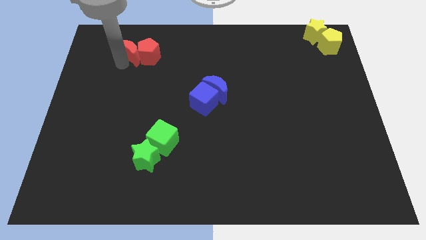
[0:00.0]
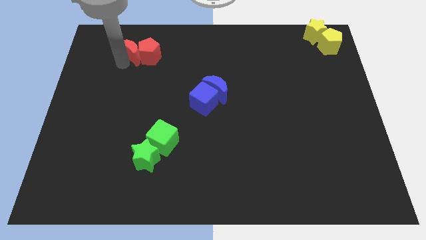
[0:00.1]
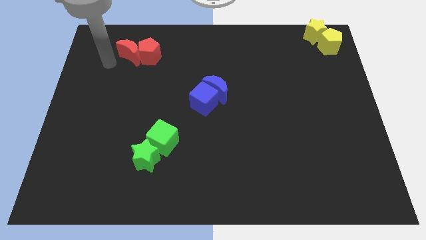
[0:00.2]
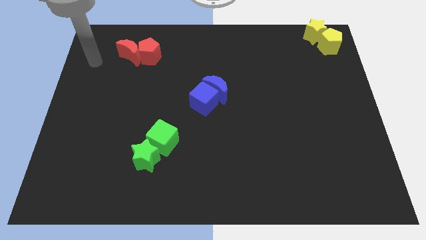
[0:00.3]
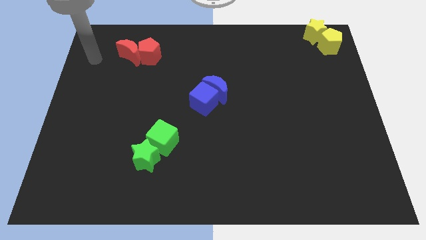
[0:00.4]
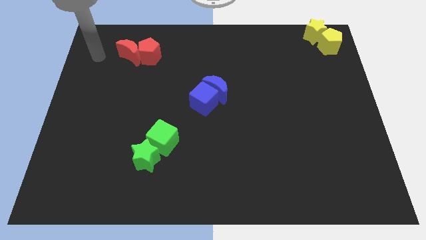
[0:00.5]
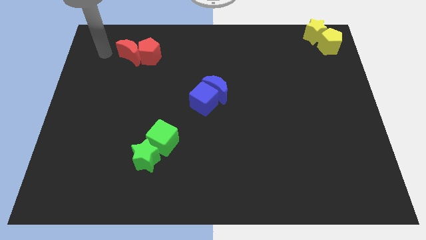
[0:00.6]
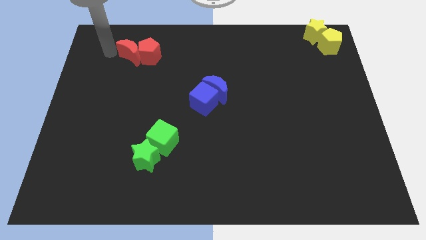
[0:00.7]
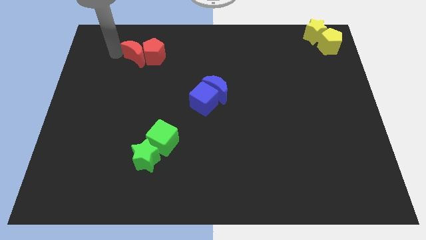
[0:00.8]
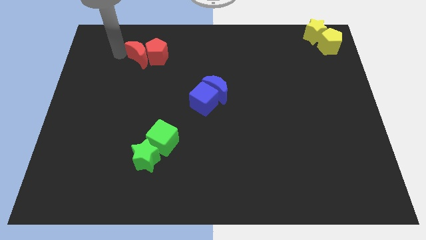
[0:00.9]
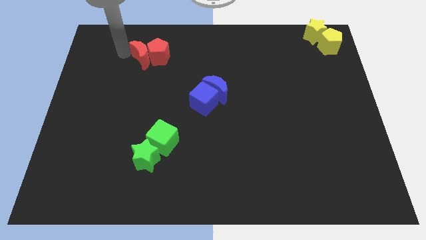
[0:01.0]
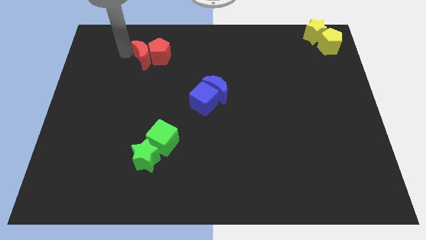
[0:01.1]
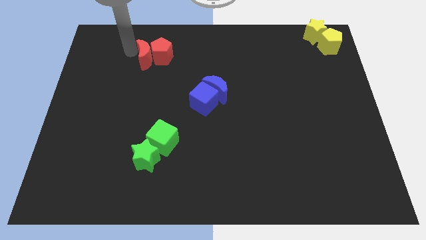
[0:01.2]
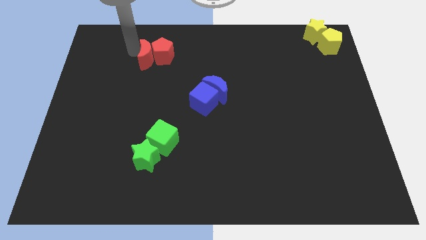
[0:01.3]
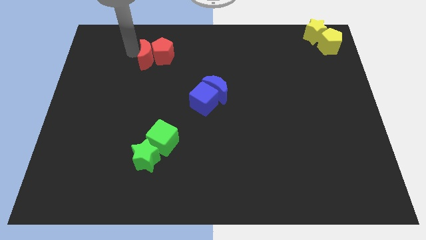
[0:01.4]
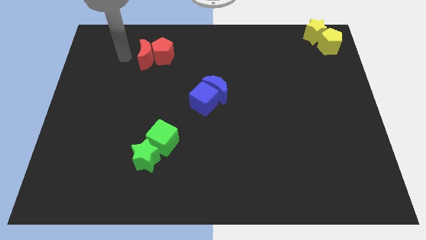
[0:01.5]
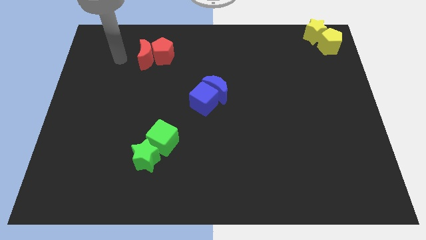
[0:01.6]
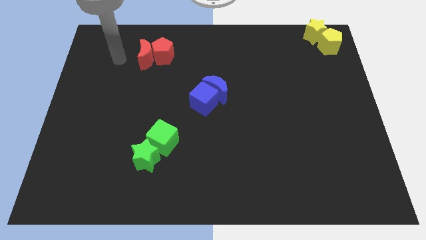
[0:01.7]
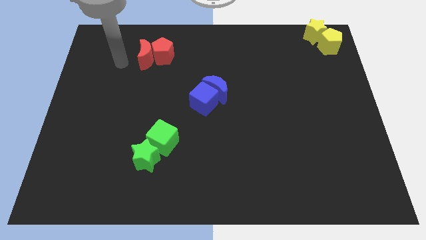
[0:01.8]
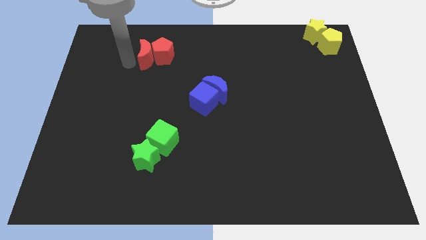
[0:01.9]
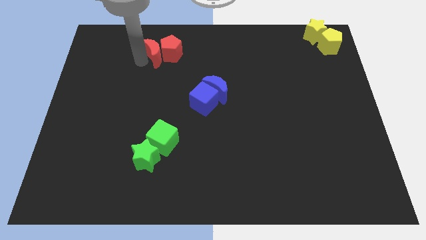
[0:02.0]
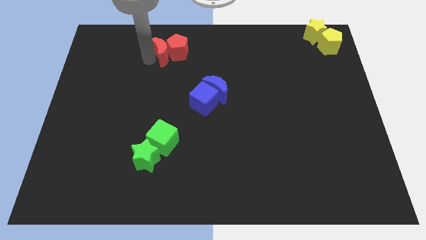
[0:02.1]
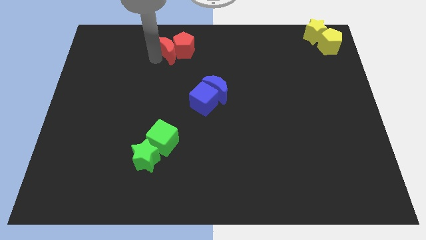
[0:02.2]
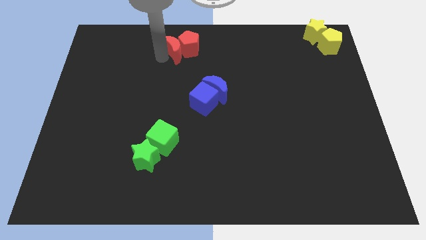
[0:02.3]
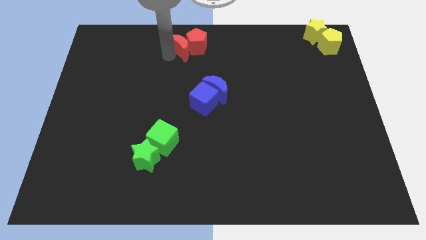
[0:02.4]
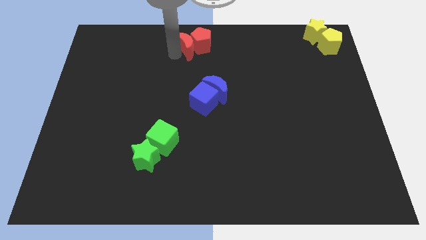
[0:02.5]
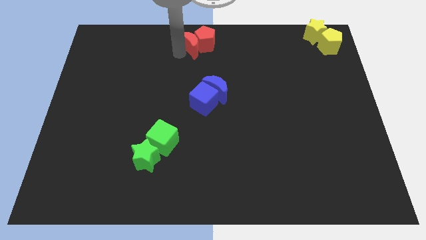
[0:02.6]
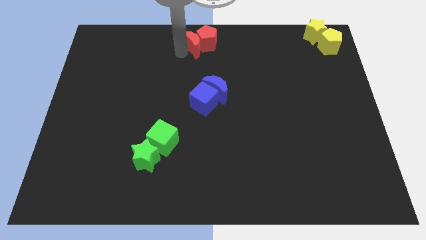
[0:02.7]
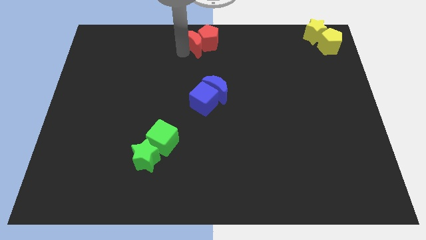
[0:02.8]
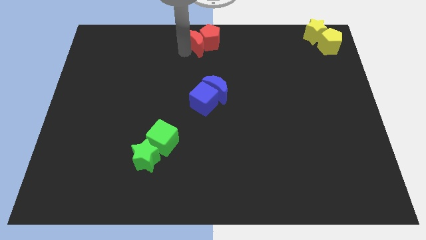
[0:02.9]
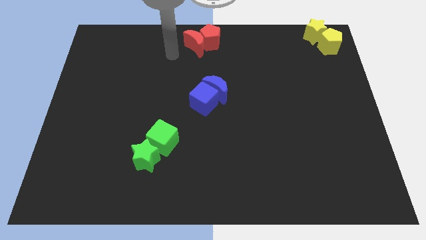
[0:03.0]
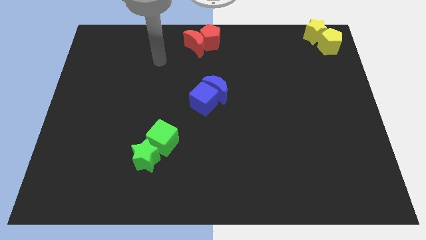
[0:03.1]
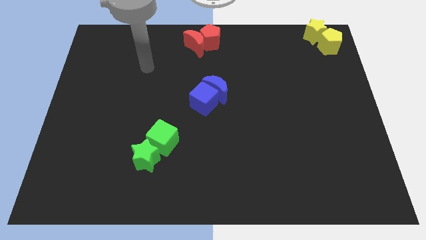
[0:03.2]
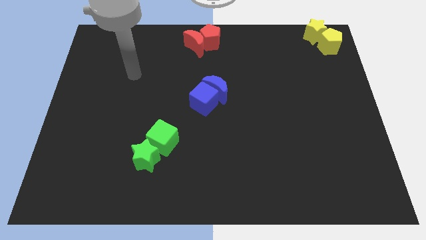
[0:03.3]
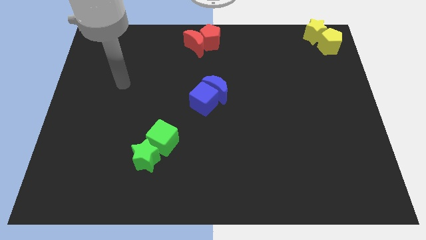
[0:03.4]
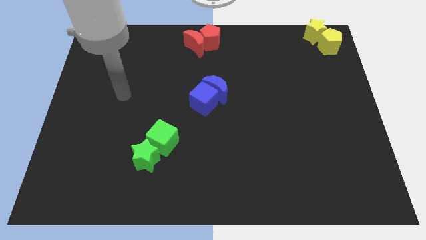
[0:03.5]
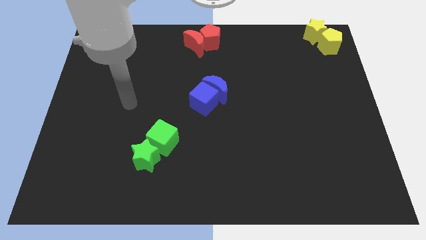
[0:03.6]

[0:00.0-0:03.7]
slide the red blocks to the top center of the board

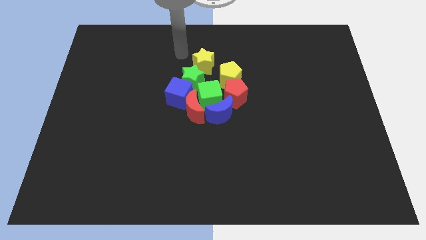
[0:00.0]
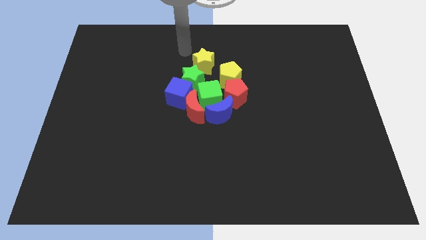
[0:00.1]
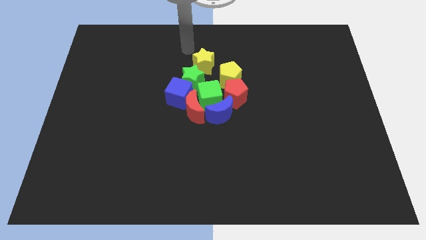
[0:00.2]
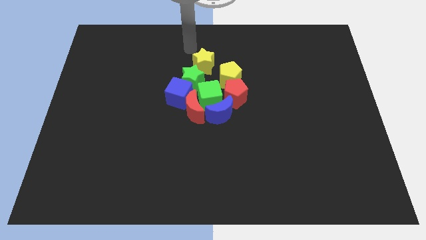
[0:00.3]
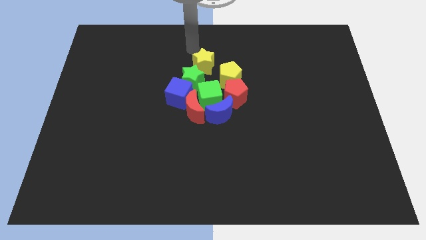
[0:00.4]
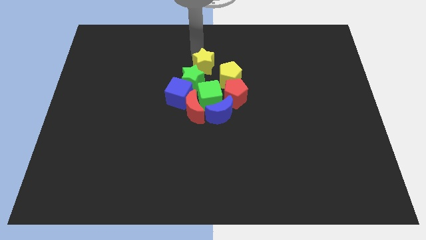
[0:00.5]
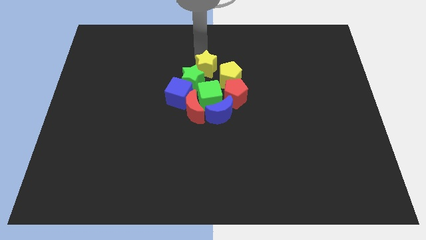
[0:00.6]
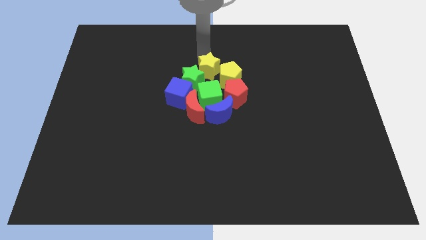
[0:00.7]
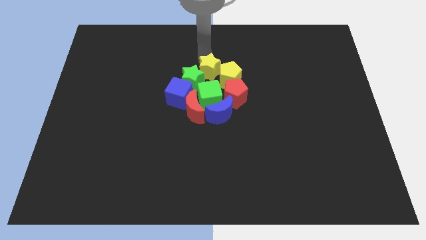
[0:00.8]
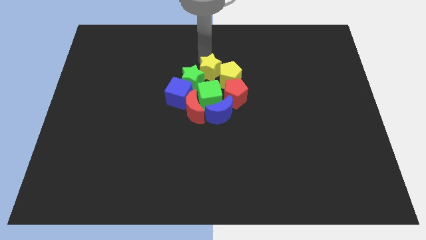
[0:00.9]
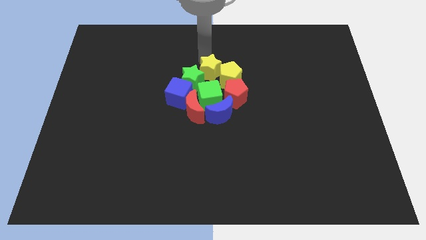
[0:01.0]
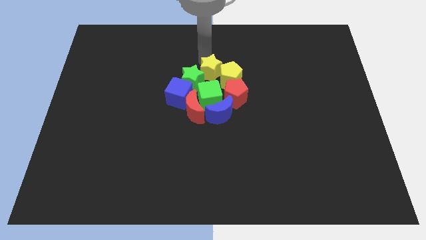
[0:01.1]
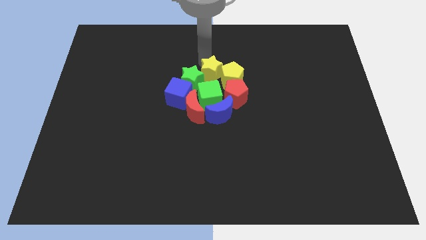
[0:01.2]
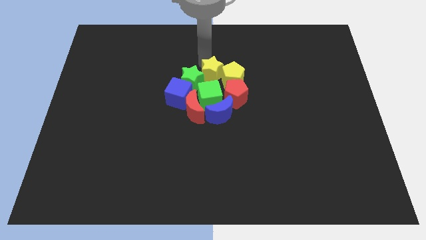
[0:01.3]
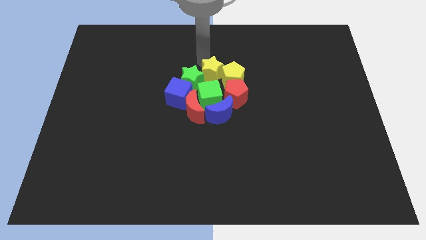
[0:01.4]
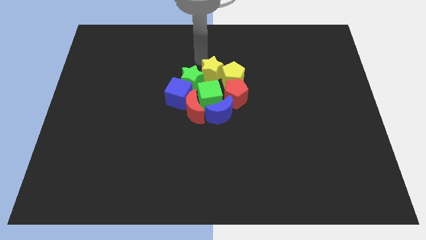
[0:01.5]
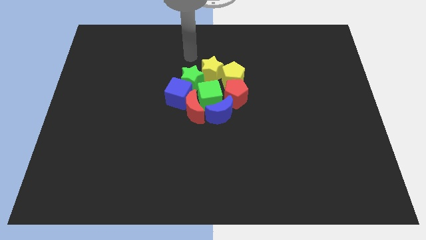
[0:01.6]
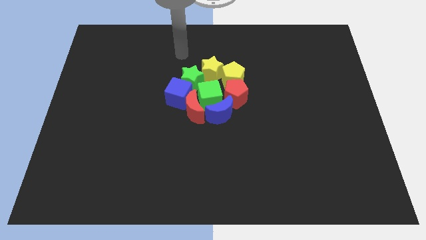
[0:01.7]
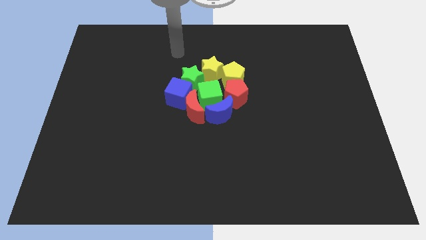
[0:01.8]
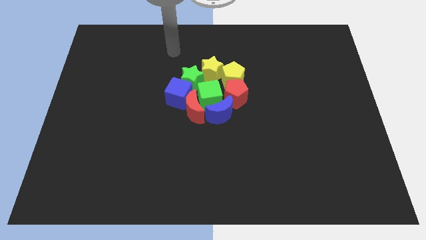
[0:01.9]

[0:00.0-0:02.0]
move the yellow star to the top of the green cube

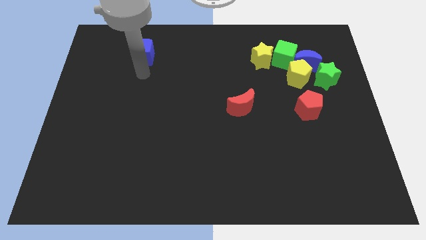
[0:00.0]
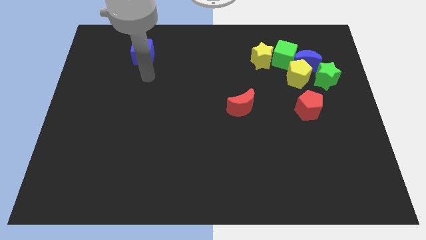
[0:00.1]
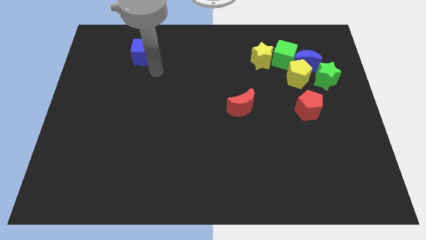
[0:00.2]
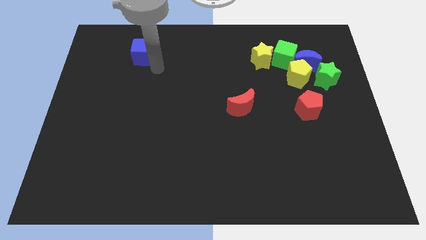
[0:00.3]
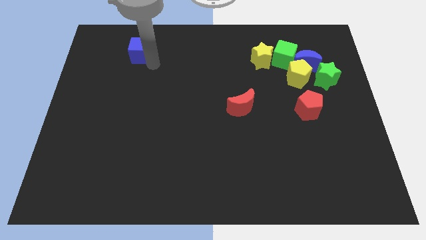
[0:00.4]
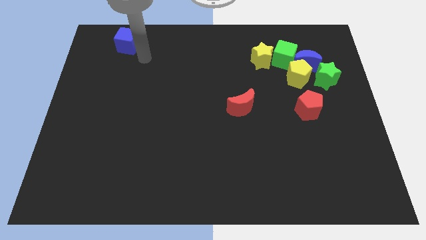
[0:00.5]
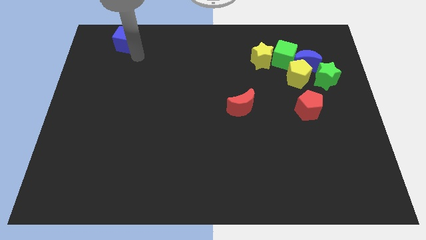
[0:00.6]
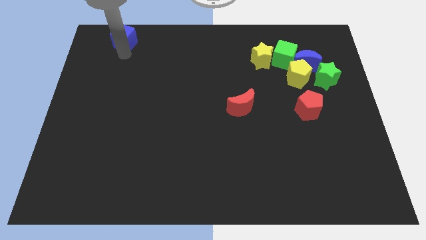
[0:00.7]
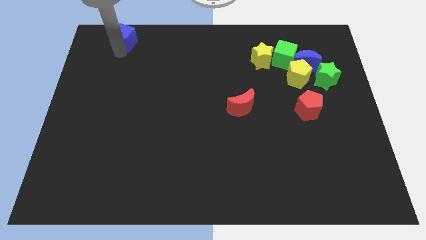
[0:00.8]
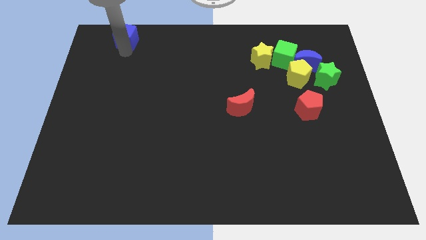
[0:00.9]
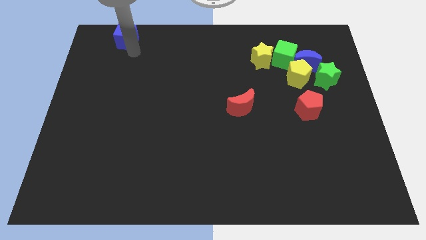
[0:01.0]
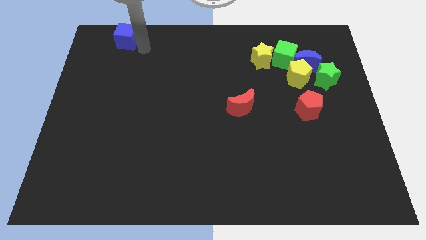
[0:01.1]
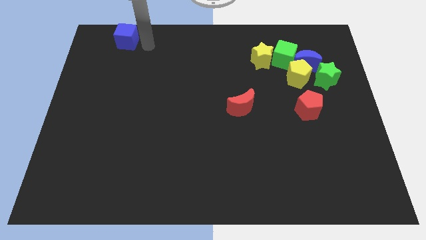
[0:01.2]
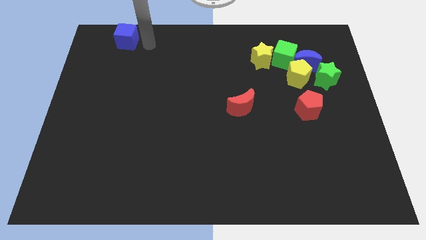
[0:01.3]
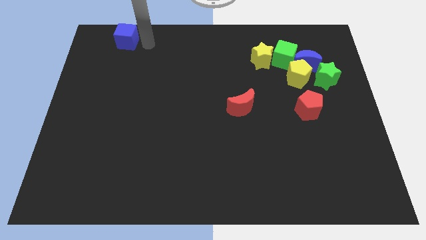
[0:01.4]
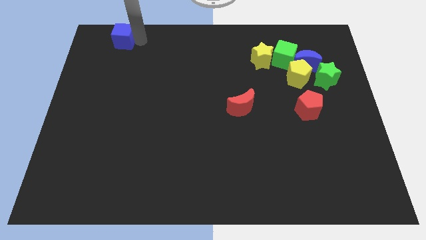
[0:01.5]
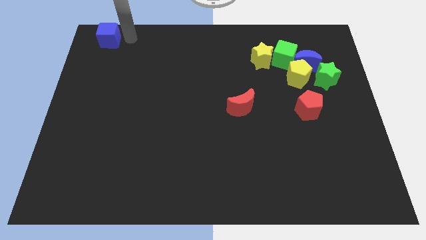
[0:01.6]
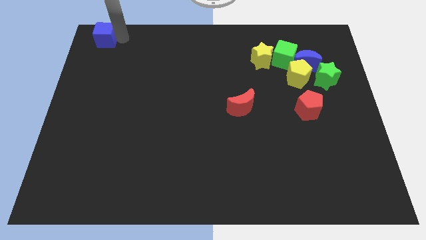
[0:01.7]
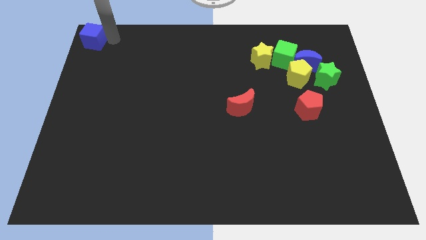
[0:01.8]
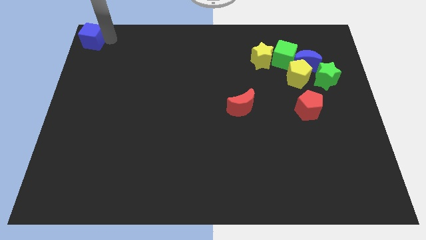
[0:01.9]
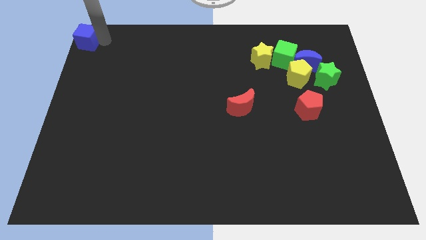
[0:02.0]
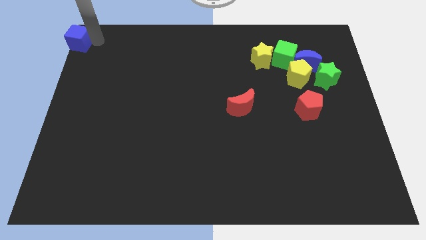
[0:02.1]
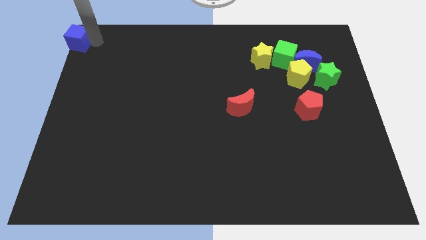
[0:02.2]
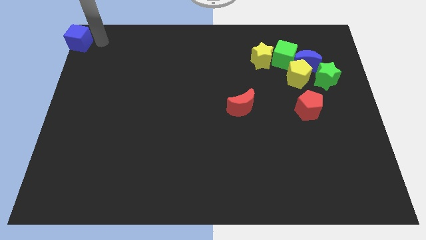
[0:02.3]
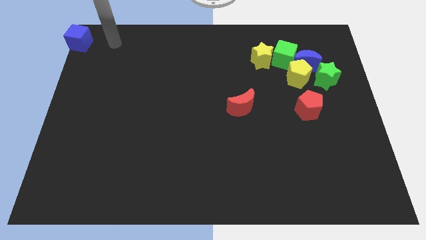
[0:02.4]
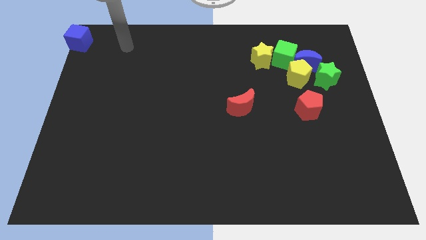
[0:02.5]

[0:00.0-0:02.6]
push the blue cube to the top left corner of the board

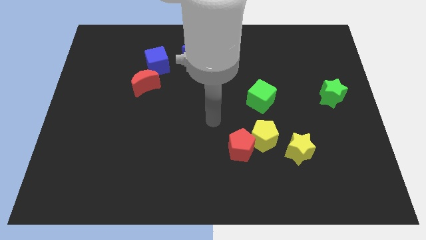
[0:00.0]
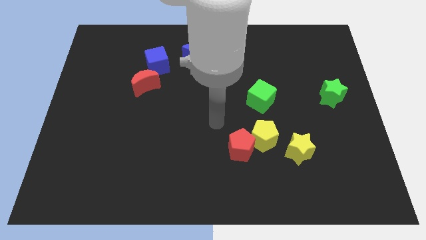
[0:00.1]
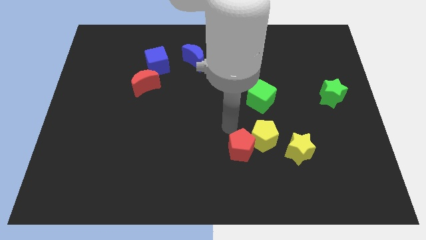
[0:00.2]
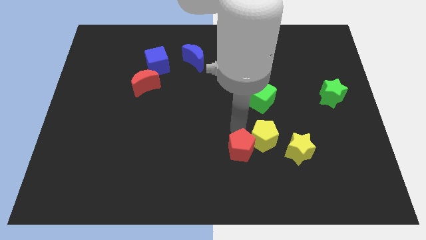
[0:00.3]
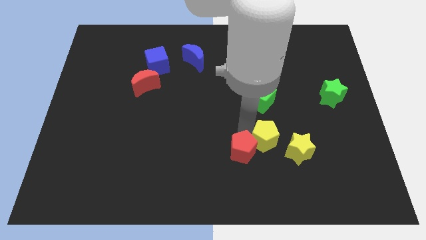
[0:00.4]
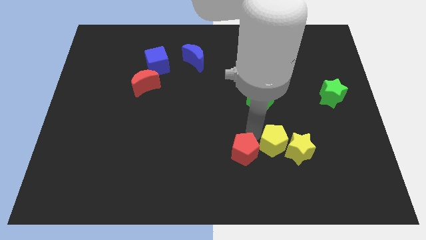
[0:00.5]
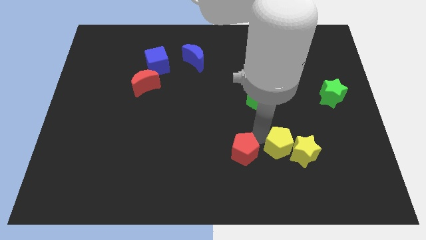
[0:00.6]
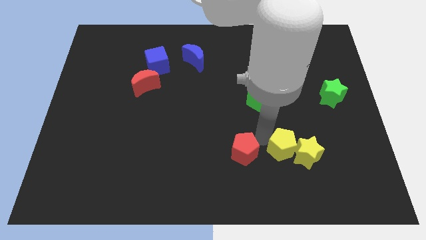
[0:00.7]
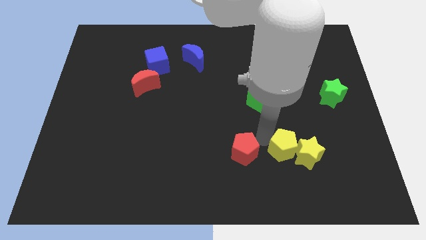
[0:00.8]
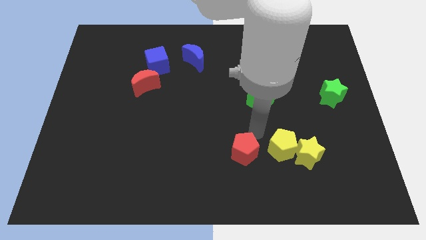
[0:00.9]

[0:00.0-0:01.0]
push yellow pentagon towards towards yellow star
